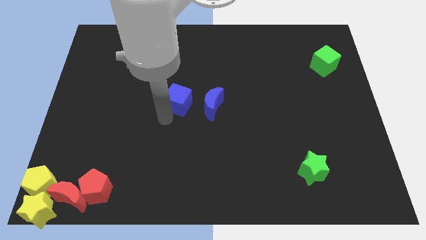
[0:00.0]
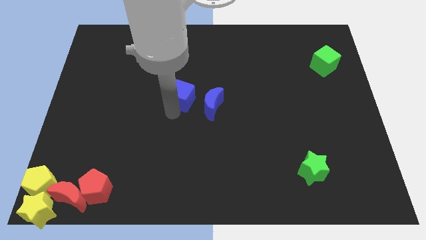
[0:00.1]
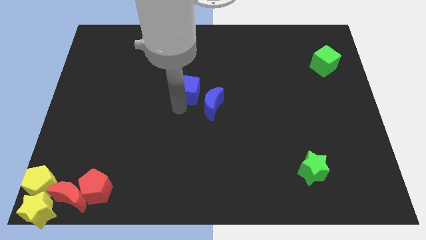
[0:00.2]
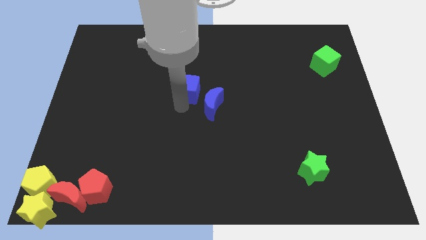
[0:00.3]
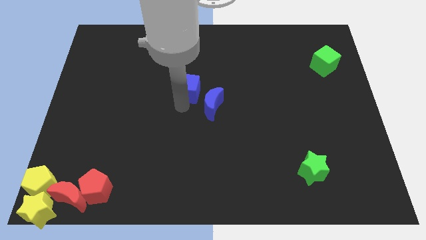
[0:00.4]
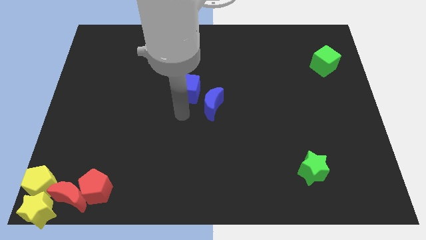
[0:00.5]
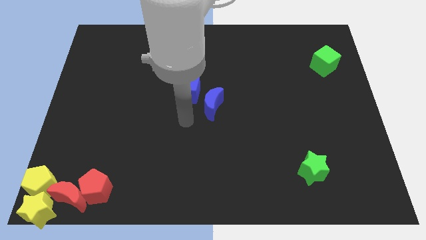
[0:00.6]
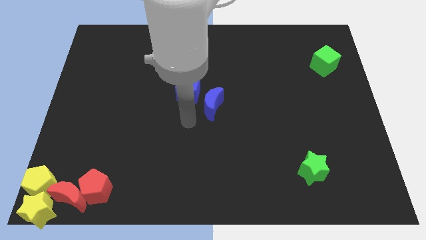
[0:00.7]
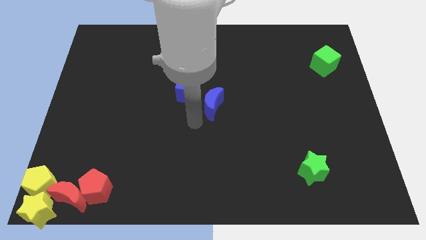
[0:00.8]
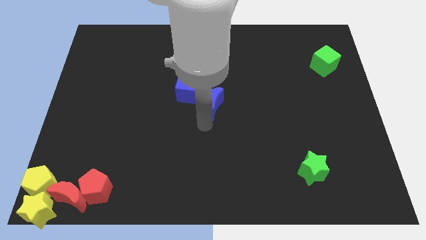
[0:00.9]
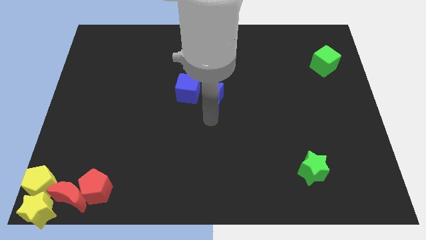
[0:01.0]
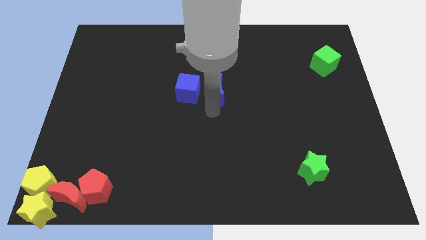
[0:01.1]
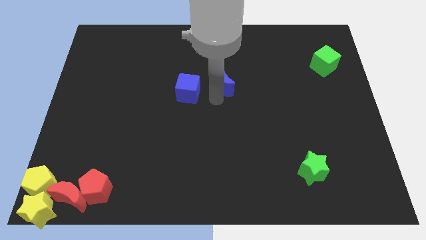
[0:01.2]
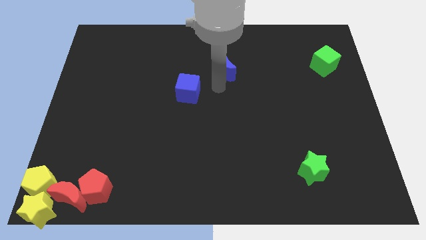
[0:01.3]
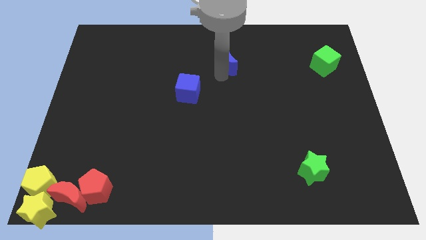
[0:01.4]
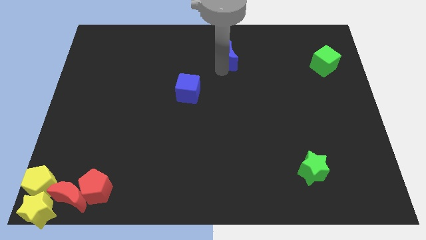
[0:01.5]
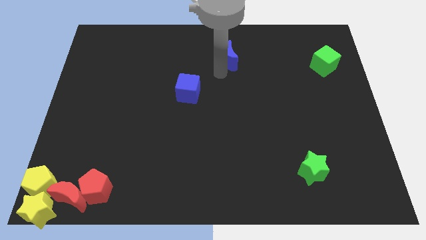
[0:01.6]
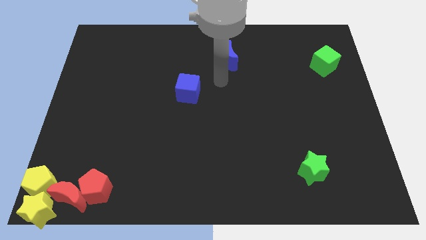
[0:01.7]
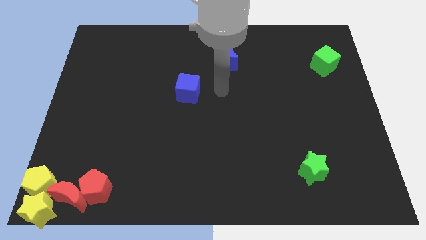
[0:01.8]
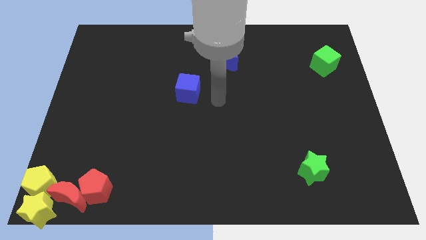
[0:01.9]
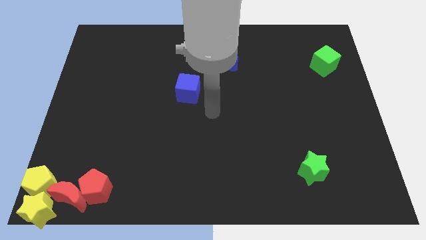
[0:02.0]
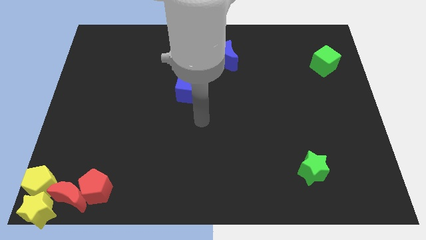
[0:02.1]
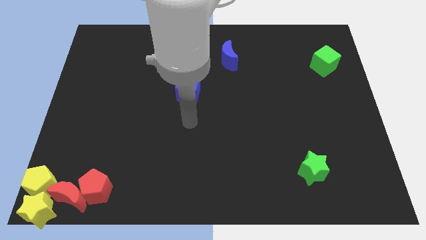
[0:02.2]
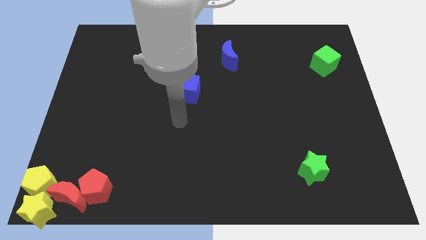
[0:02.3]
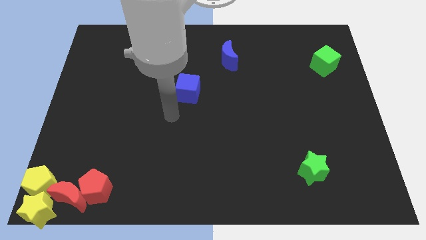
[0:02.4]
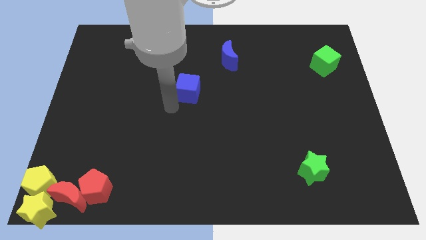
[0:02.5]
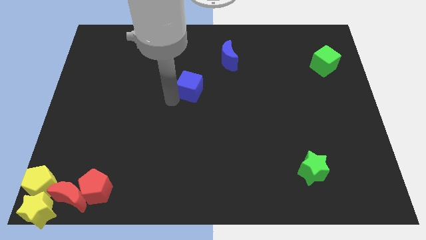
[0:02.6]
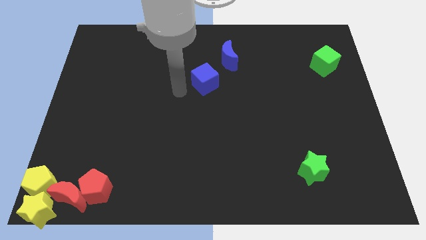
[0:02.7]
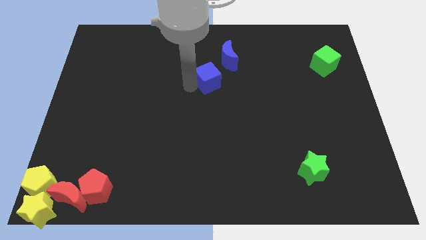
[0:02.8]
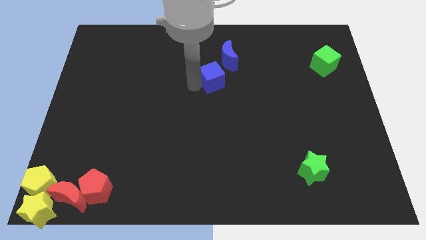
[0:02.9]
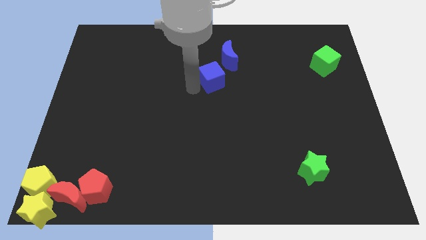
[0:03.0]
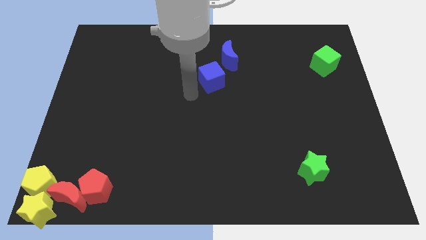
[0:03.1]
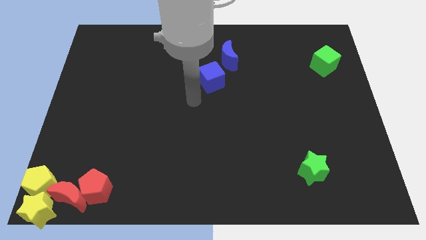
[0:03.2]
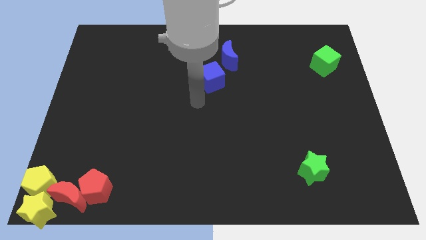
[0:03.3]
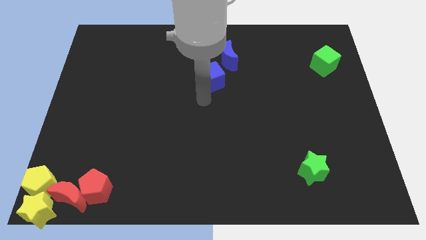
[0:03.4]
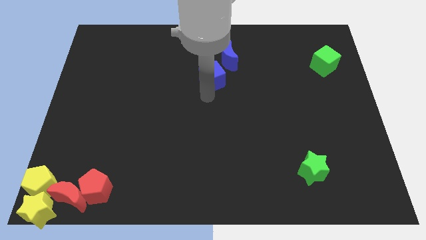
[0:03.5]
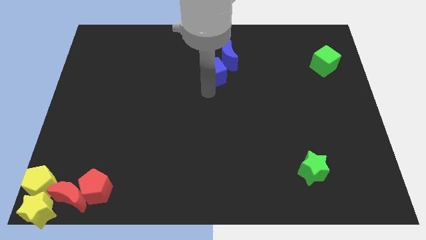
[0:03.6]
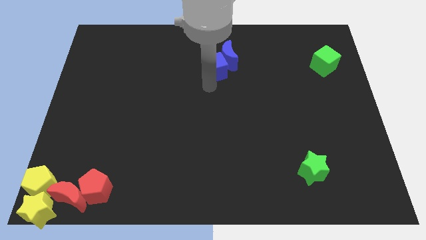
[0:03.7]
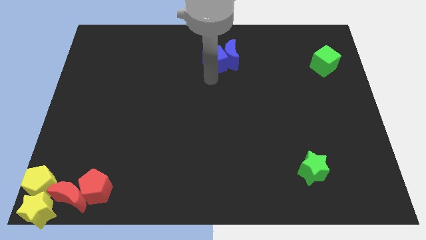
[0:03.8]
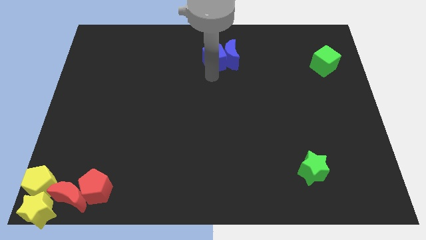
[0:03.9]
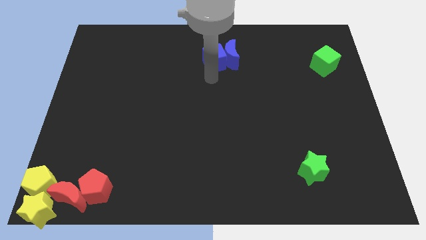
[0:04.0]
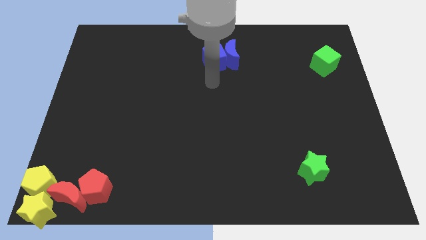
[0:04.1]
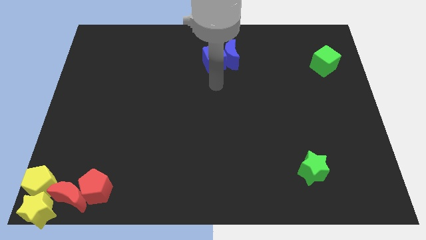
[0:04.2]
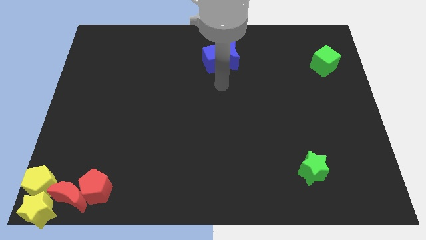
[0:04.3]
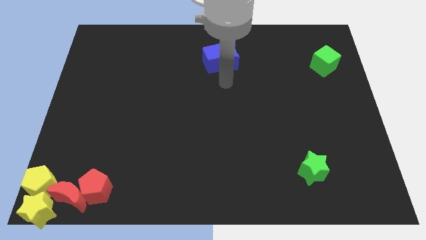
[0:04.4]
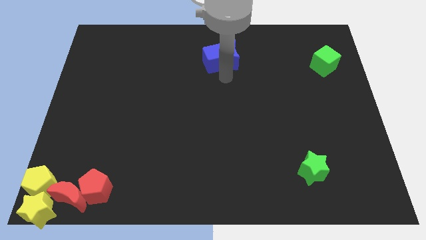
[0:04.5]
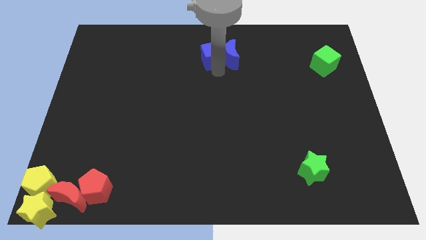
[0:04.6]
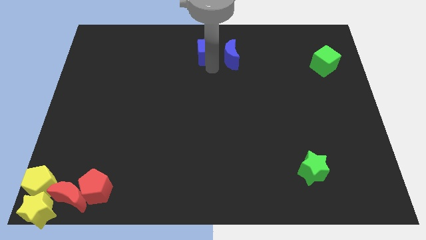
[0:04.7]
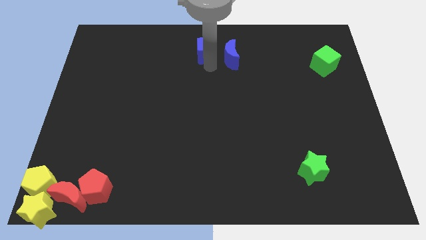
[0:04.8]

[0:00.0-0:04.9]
move blue blocks to the top center

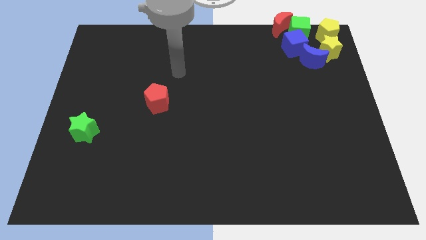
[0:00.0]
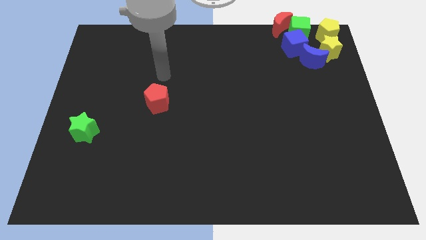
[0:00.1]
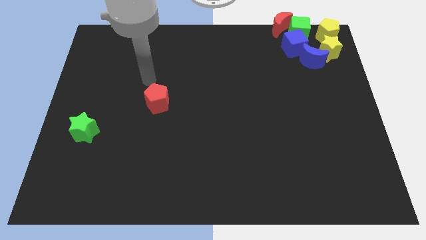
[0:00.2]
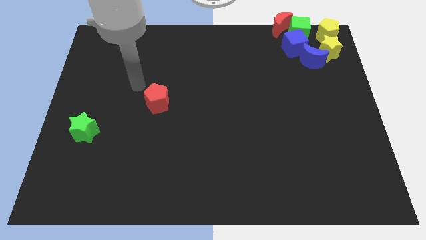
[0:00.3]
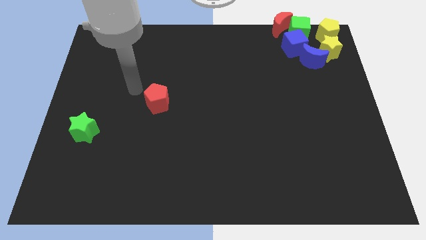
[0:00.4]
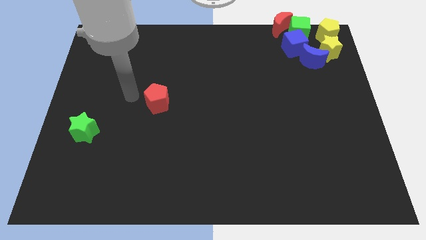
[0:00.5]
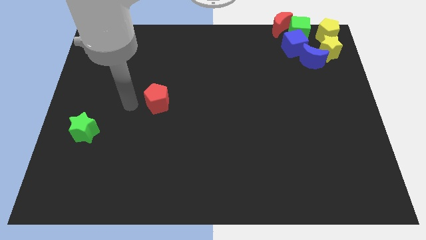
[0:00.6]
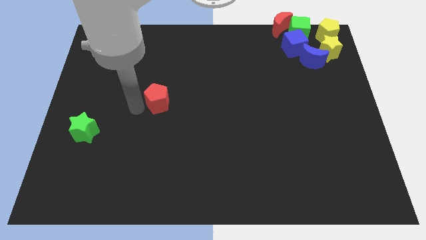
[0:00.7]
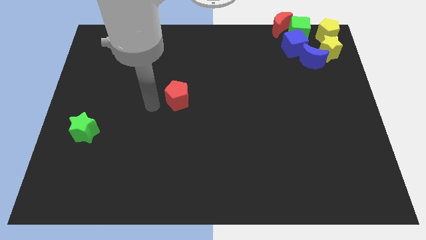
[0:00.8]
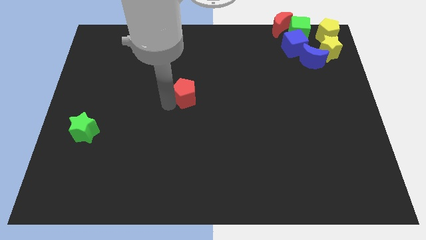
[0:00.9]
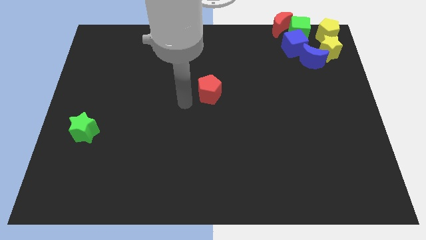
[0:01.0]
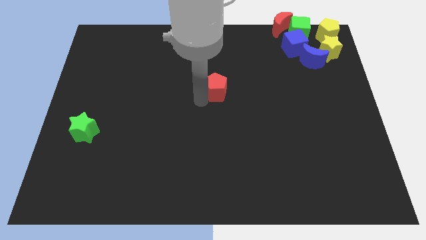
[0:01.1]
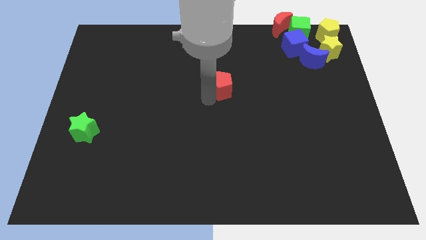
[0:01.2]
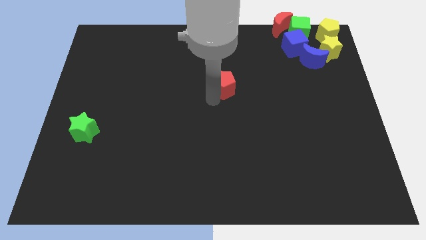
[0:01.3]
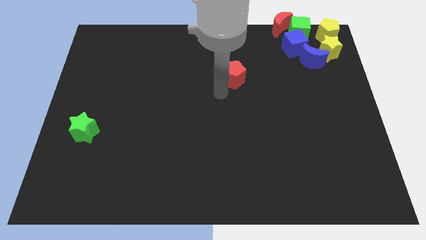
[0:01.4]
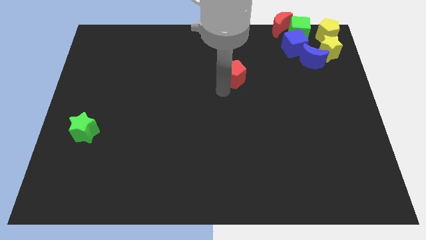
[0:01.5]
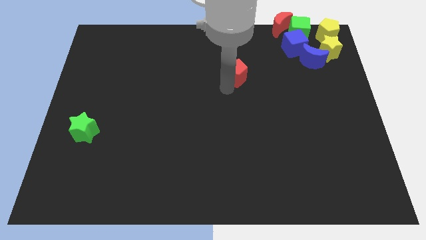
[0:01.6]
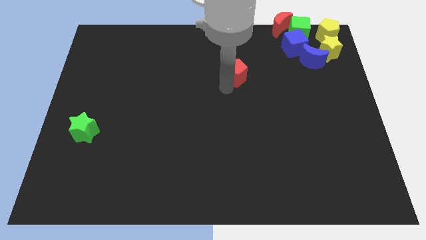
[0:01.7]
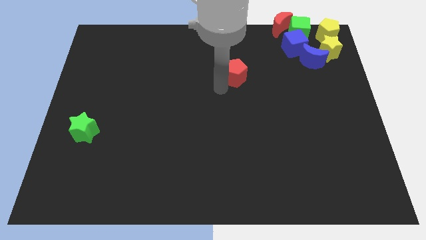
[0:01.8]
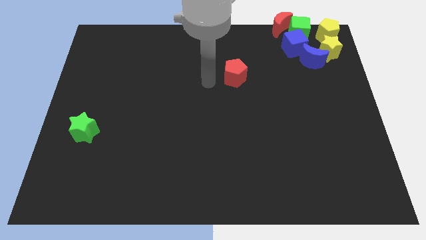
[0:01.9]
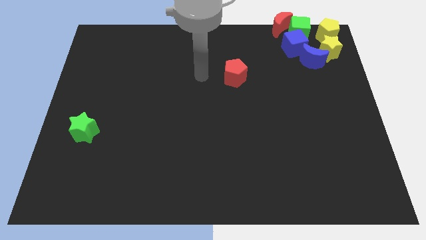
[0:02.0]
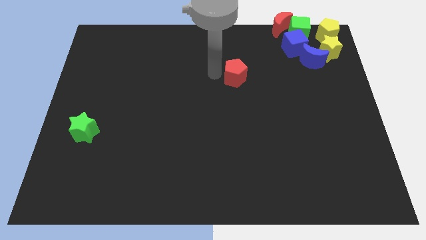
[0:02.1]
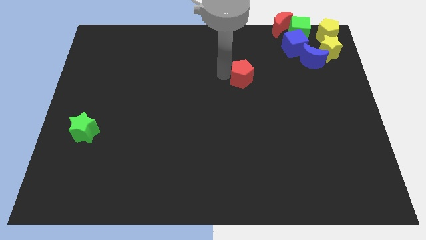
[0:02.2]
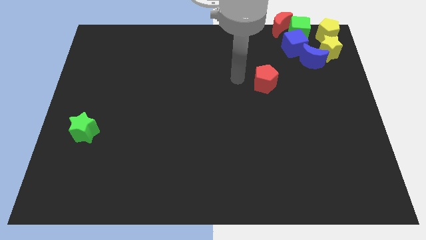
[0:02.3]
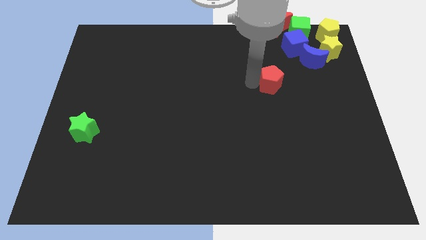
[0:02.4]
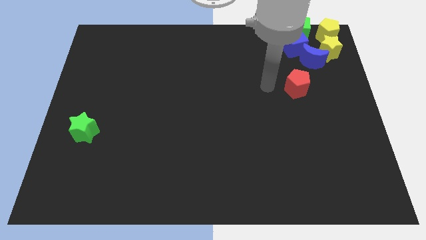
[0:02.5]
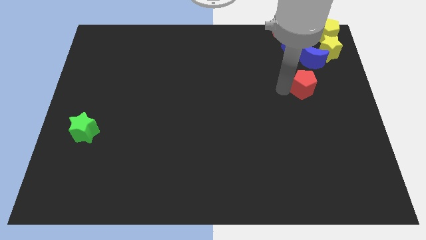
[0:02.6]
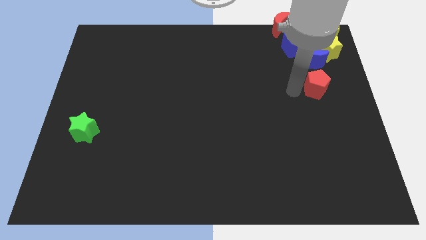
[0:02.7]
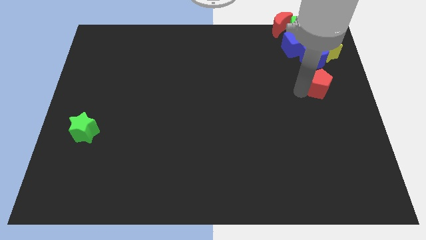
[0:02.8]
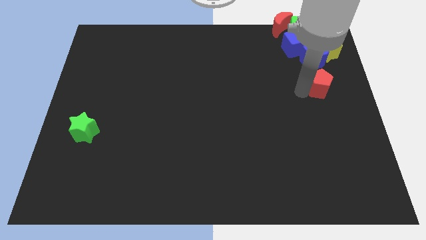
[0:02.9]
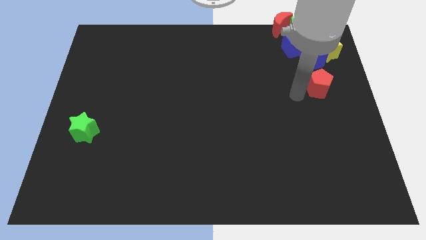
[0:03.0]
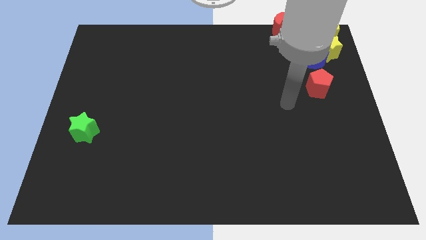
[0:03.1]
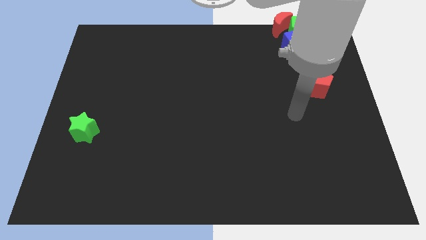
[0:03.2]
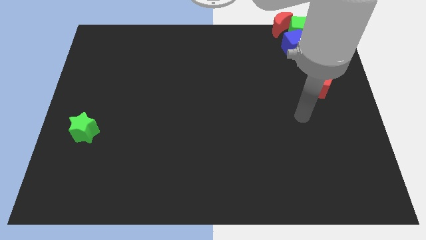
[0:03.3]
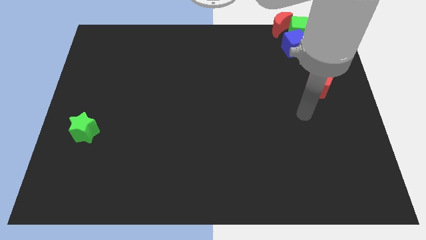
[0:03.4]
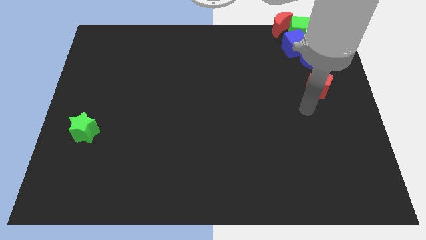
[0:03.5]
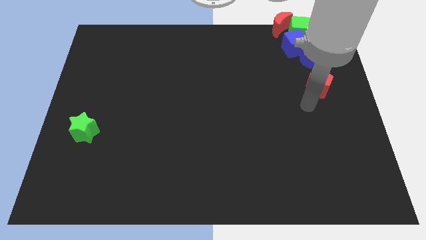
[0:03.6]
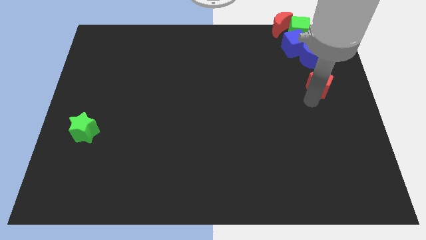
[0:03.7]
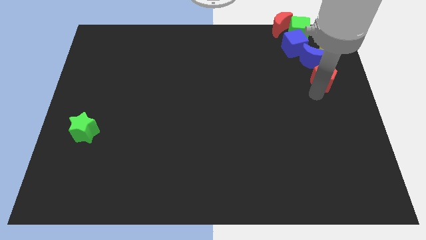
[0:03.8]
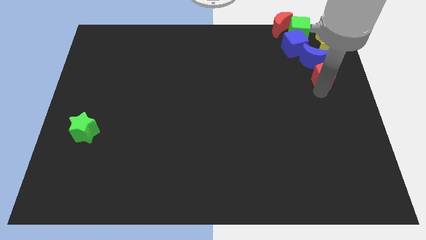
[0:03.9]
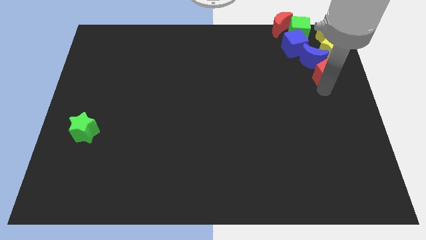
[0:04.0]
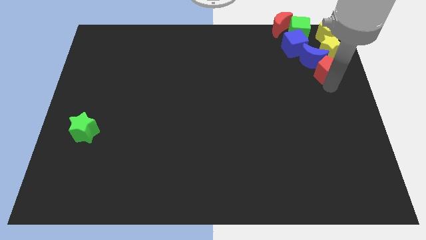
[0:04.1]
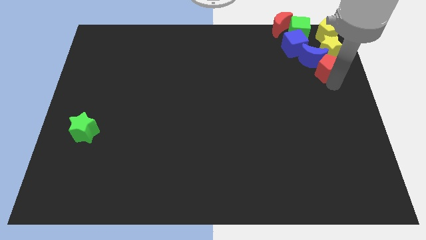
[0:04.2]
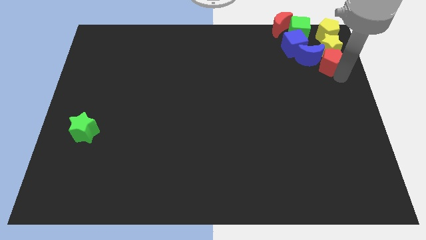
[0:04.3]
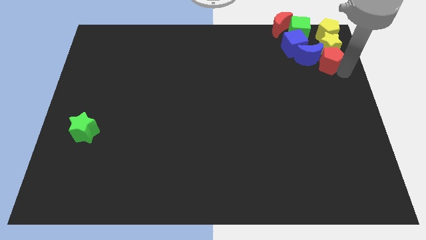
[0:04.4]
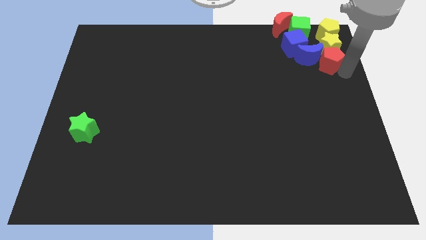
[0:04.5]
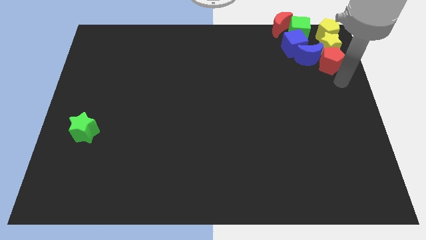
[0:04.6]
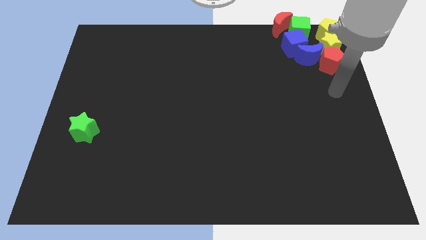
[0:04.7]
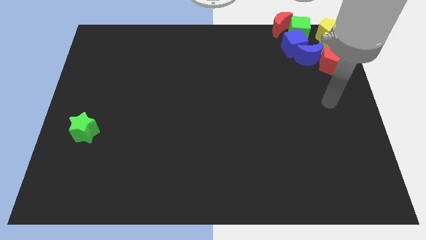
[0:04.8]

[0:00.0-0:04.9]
place the red pentagon into the bottom of the yellow star
